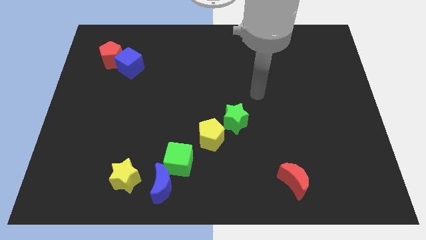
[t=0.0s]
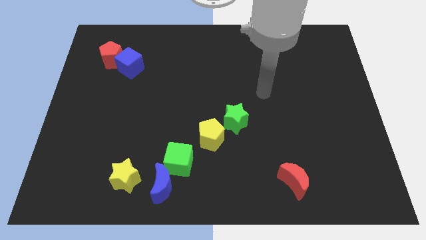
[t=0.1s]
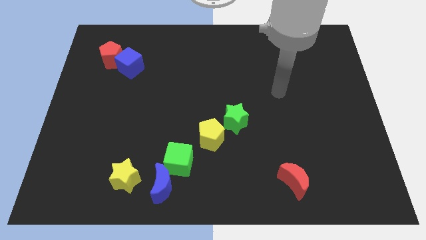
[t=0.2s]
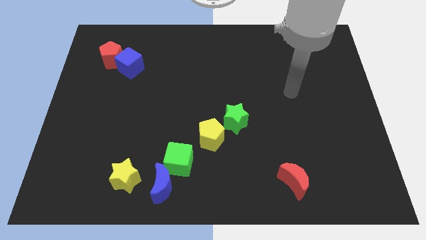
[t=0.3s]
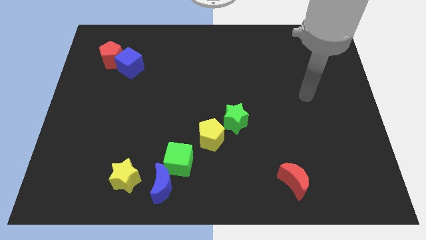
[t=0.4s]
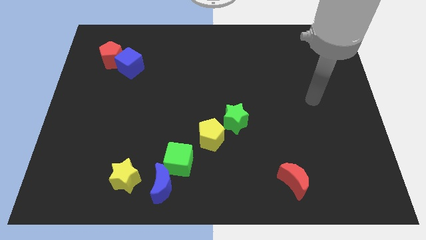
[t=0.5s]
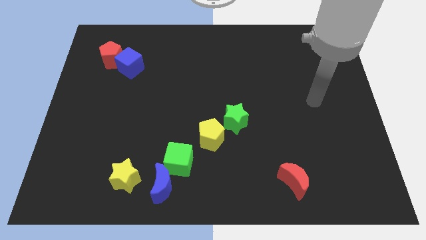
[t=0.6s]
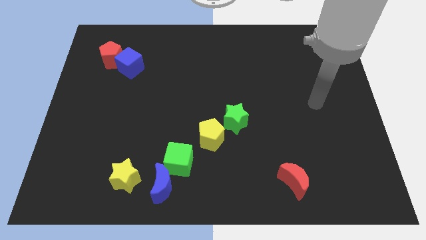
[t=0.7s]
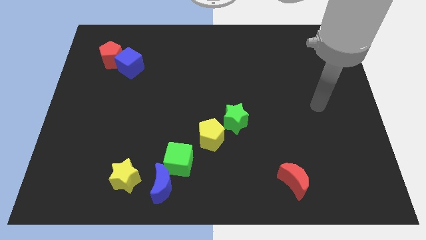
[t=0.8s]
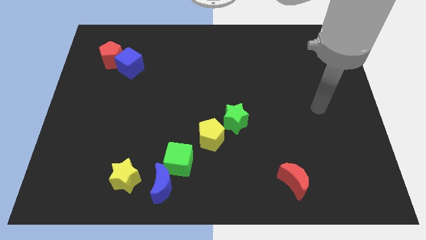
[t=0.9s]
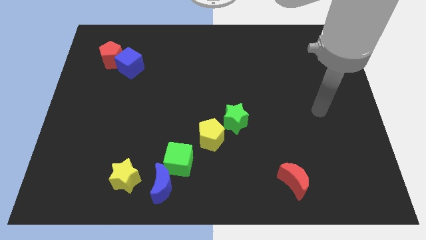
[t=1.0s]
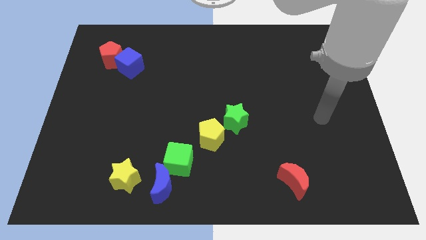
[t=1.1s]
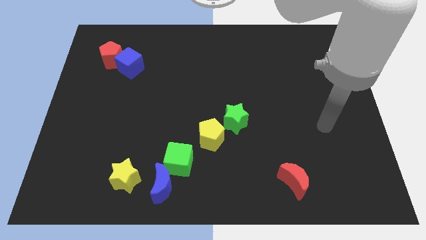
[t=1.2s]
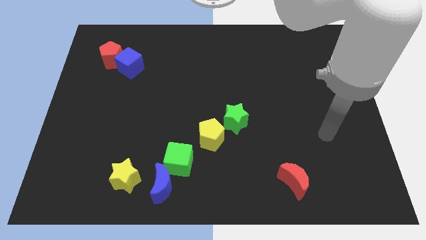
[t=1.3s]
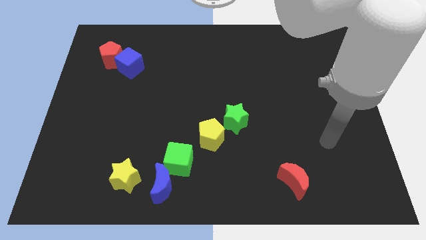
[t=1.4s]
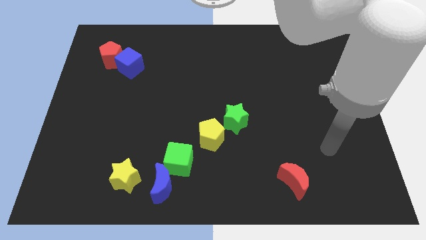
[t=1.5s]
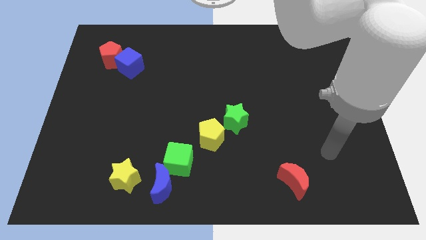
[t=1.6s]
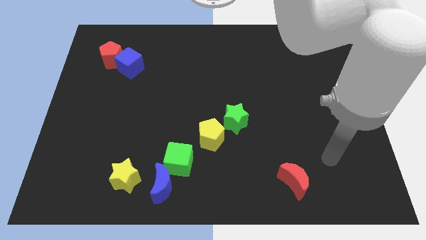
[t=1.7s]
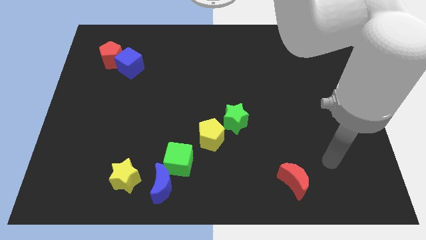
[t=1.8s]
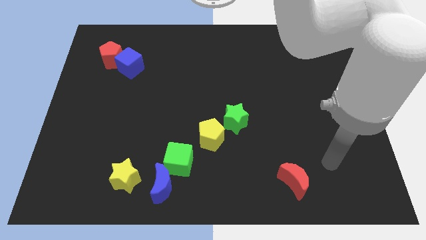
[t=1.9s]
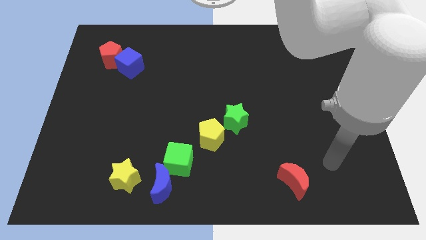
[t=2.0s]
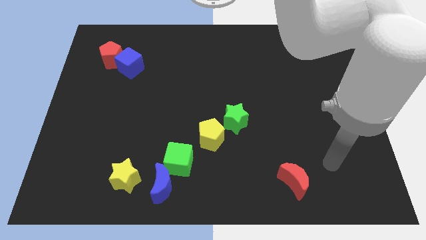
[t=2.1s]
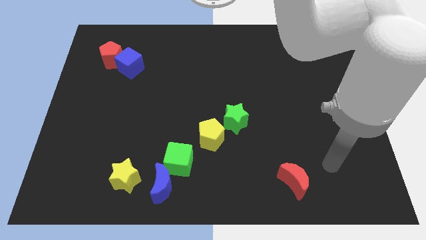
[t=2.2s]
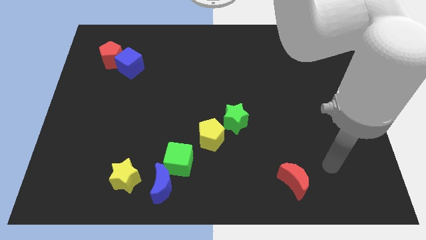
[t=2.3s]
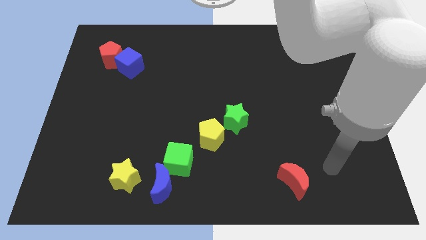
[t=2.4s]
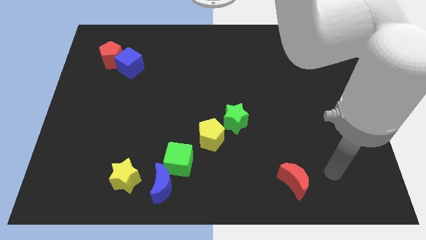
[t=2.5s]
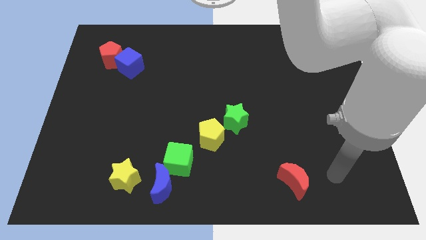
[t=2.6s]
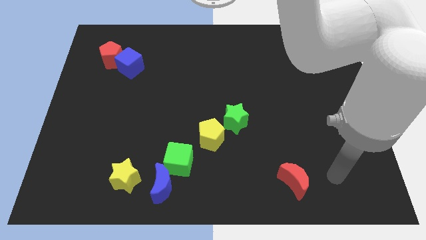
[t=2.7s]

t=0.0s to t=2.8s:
move yourself to the right of the red moon

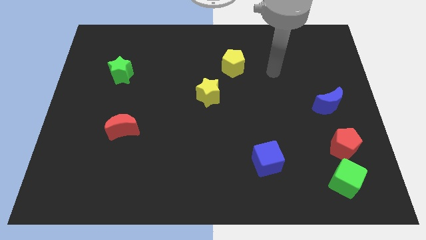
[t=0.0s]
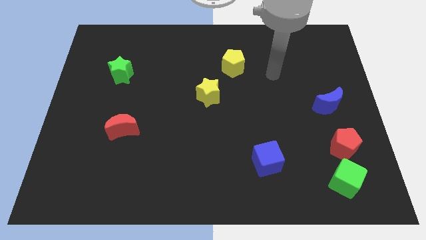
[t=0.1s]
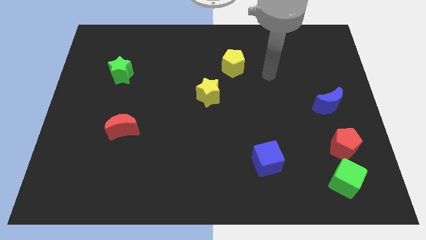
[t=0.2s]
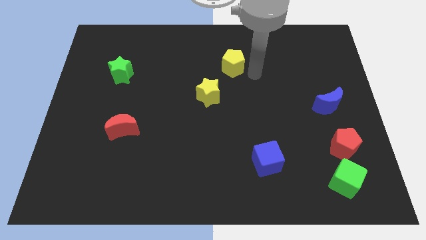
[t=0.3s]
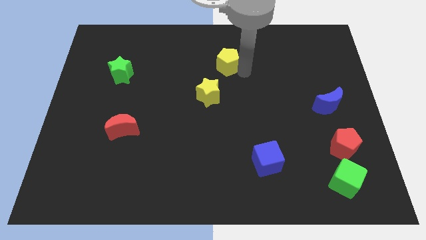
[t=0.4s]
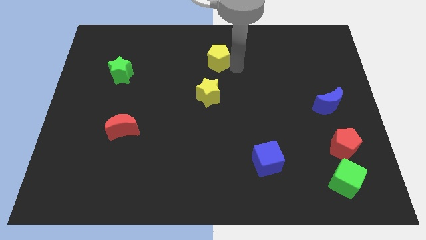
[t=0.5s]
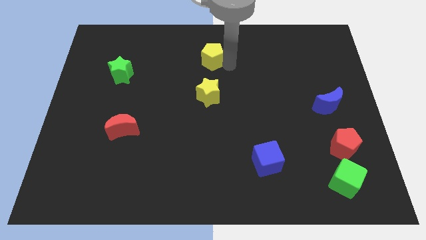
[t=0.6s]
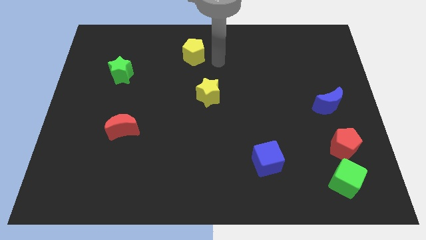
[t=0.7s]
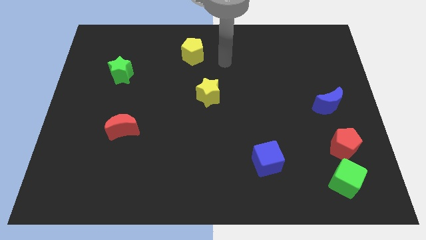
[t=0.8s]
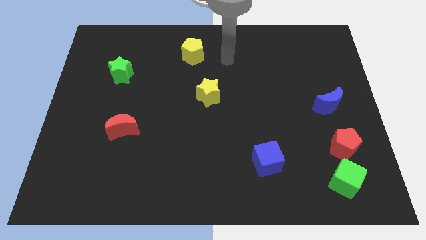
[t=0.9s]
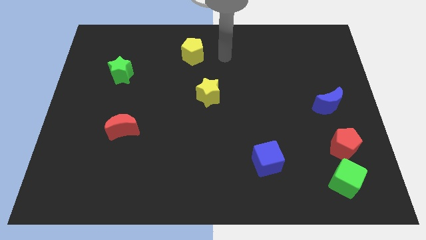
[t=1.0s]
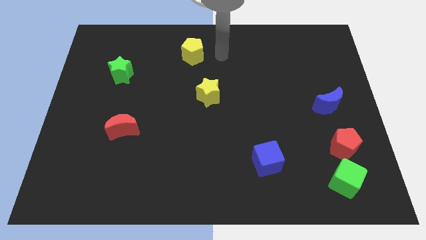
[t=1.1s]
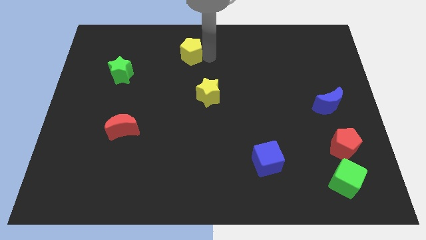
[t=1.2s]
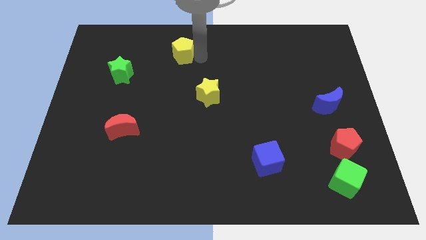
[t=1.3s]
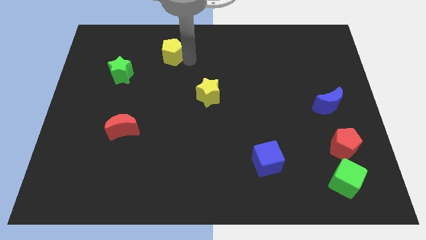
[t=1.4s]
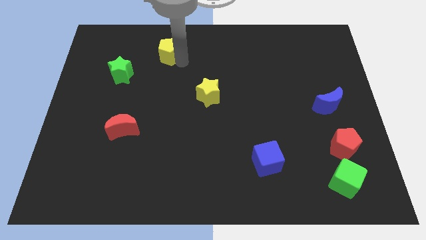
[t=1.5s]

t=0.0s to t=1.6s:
move the yellow pentagon diagonal to the red moon

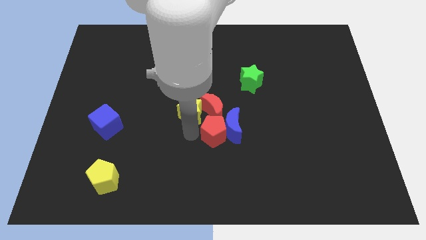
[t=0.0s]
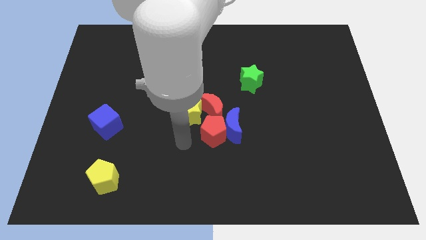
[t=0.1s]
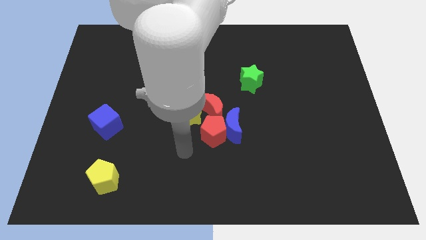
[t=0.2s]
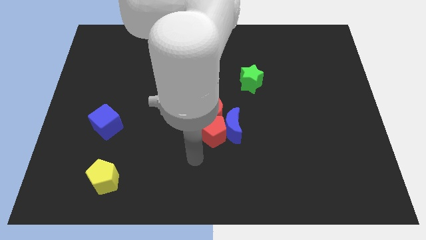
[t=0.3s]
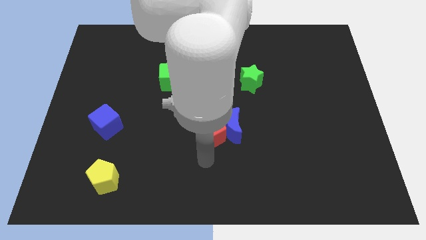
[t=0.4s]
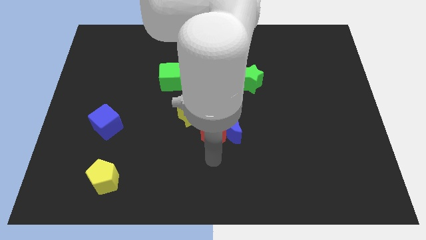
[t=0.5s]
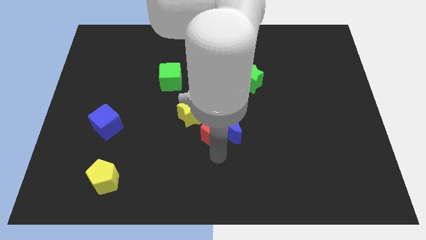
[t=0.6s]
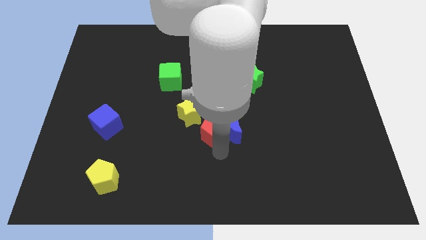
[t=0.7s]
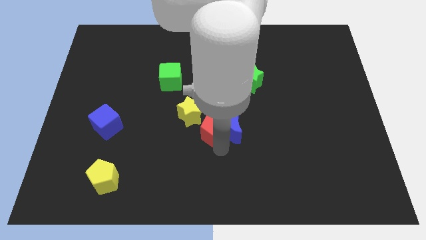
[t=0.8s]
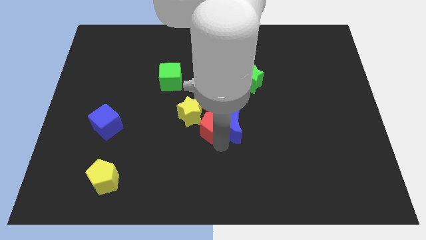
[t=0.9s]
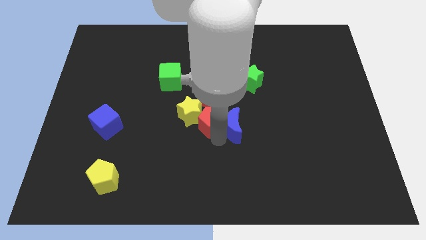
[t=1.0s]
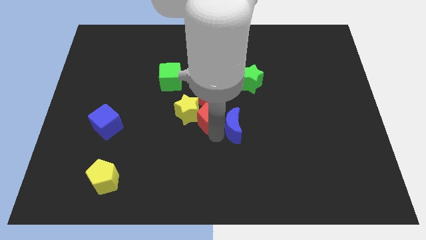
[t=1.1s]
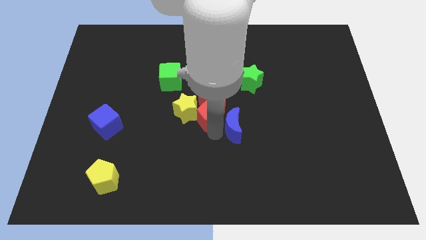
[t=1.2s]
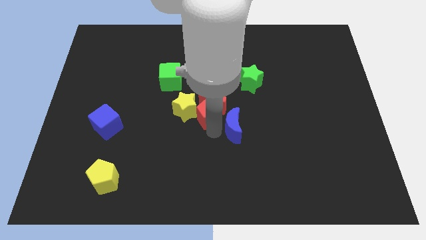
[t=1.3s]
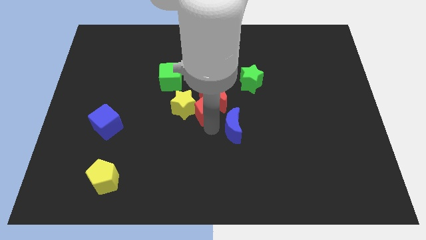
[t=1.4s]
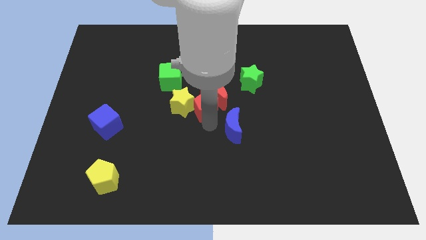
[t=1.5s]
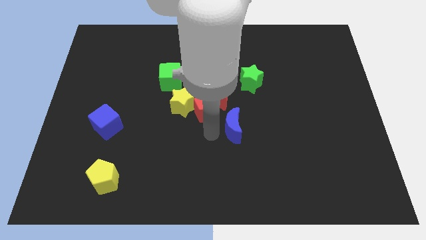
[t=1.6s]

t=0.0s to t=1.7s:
move the red pentagon into the red crescent

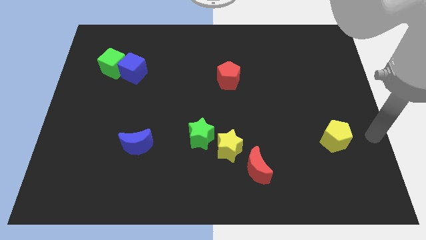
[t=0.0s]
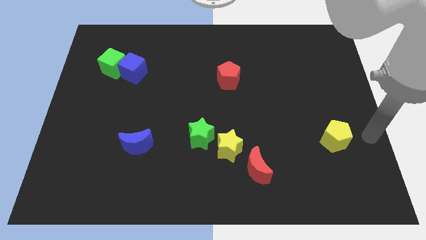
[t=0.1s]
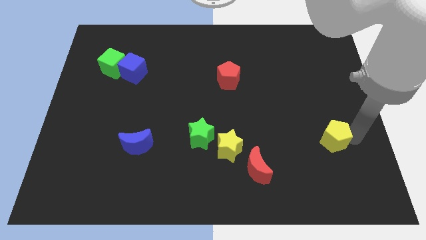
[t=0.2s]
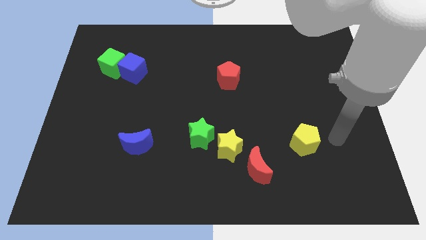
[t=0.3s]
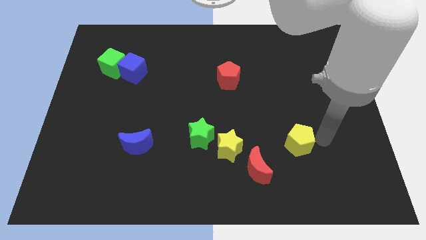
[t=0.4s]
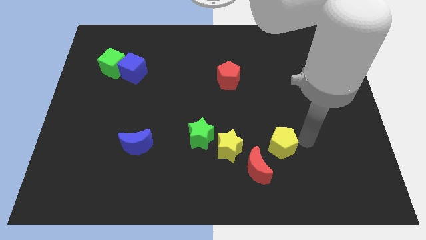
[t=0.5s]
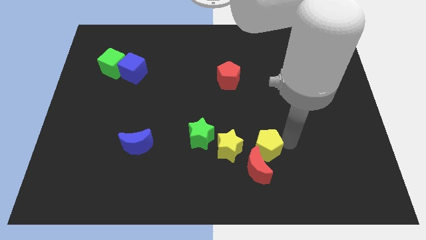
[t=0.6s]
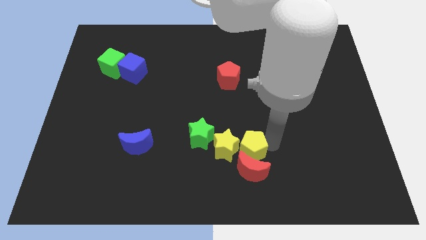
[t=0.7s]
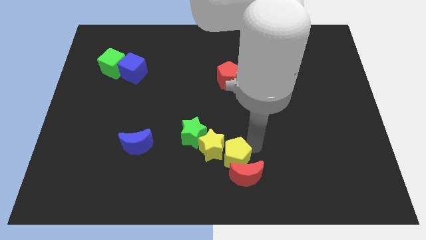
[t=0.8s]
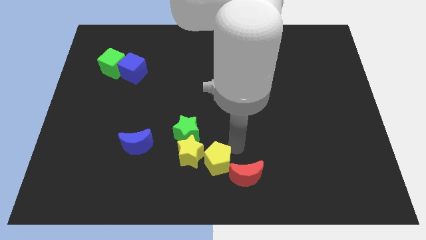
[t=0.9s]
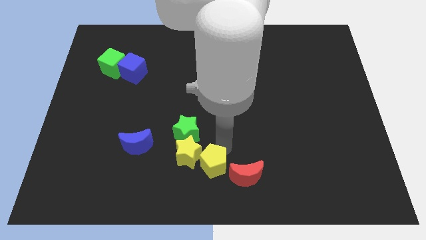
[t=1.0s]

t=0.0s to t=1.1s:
push yellow pentagon into yellow star

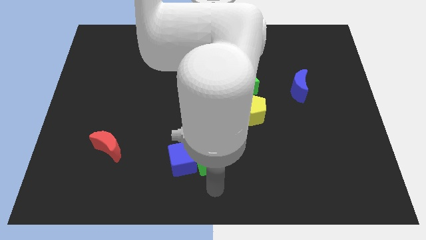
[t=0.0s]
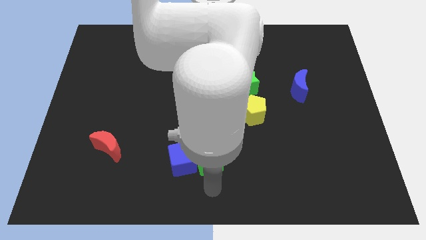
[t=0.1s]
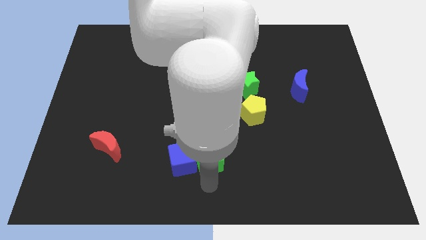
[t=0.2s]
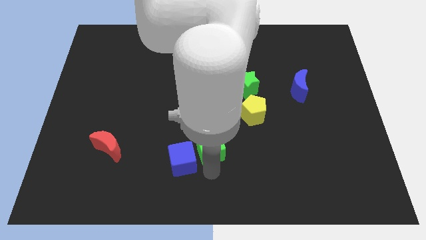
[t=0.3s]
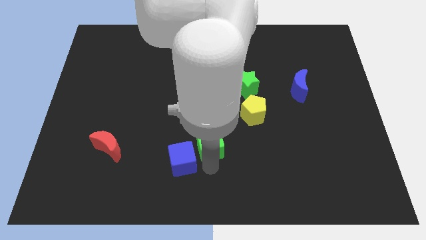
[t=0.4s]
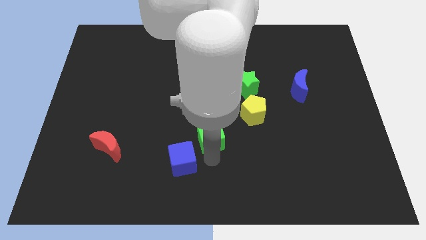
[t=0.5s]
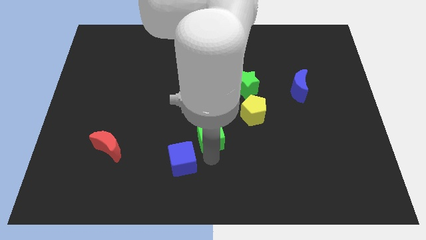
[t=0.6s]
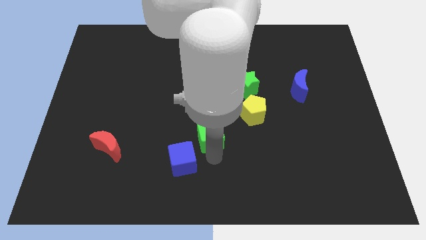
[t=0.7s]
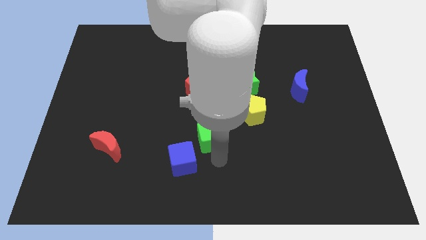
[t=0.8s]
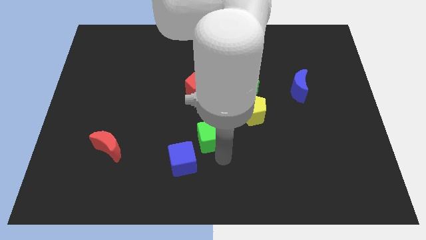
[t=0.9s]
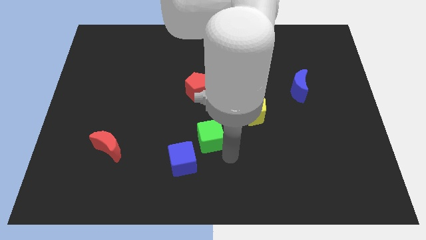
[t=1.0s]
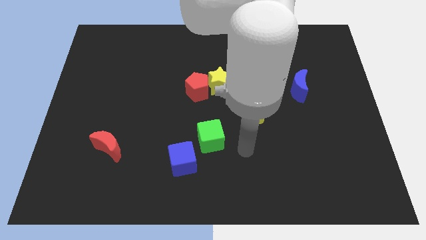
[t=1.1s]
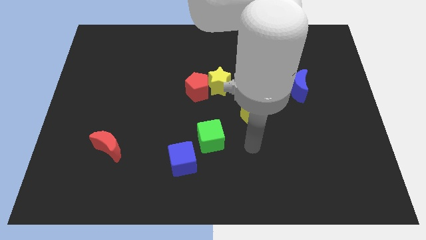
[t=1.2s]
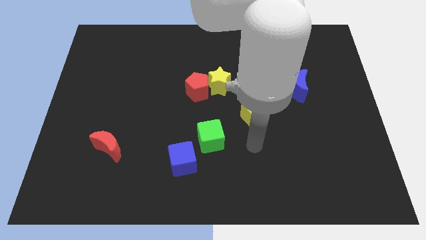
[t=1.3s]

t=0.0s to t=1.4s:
slightly push the green cube towards the top

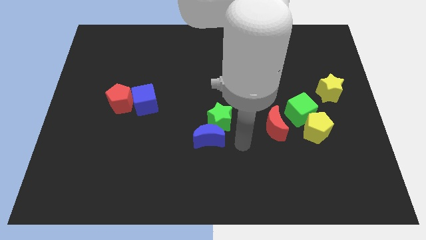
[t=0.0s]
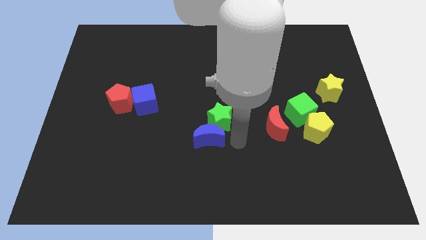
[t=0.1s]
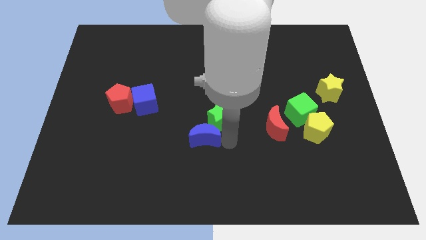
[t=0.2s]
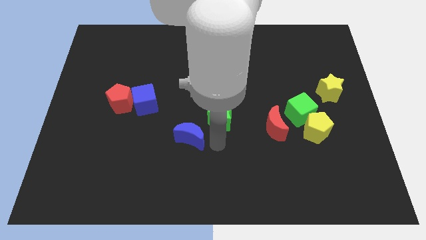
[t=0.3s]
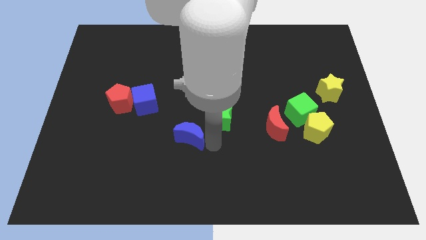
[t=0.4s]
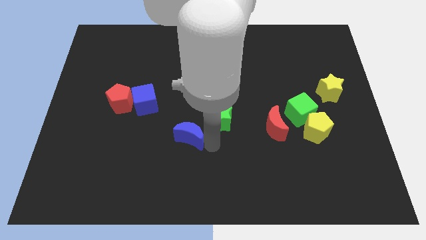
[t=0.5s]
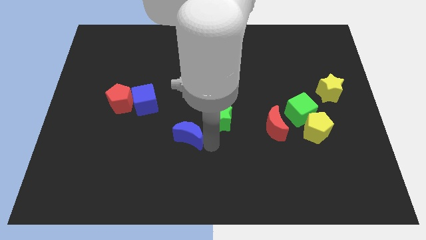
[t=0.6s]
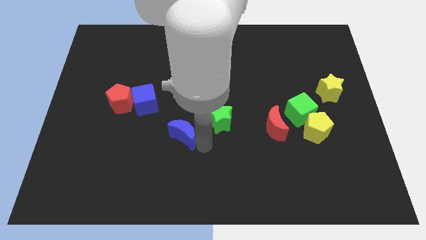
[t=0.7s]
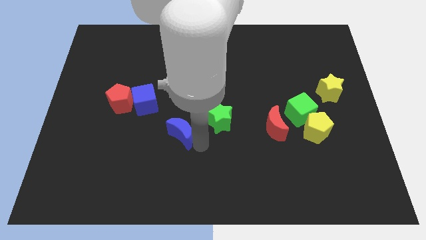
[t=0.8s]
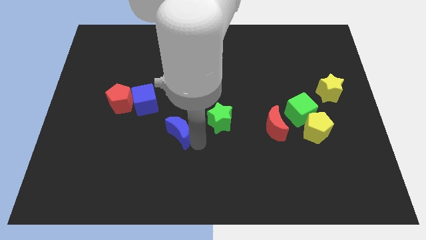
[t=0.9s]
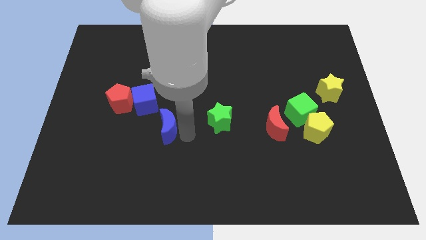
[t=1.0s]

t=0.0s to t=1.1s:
push blue moon towards blue cube
